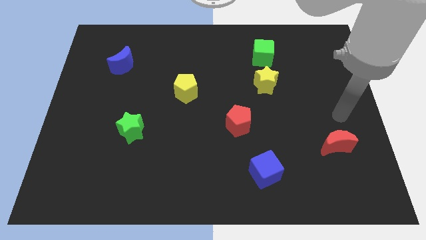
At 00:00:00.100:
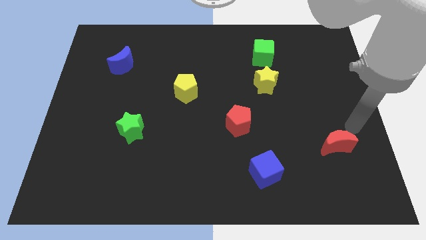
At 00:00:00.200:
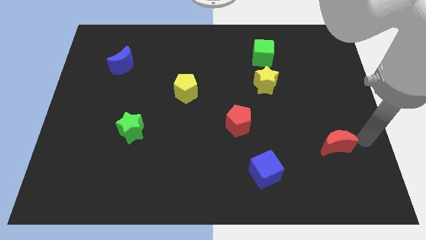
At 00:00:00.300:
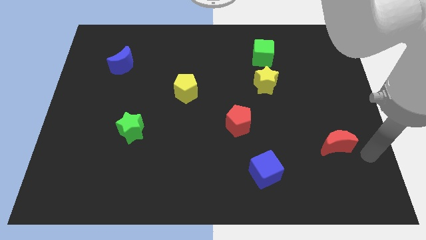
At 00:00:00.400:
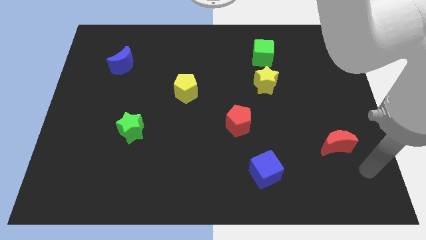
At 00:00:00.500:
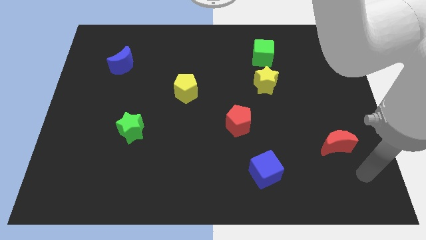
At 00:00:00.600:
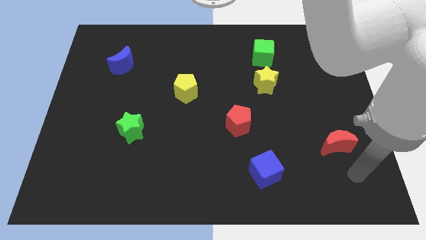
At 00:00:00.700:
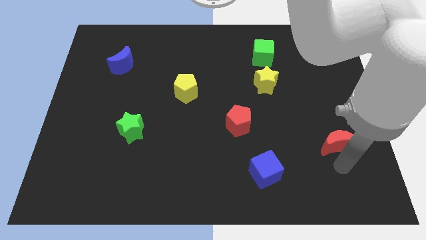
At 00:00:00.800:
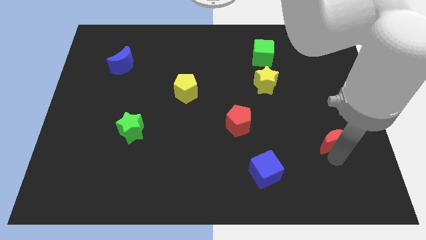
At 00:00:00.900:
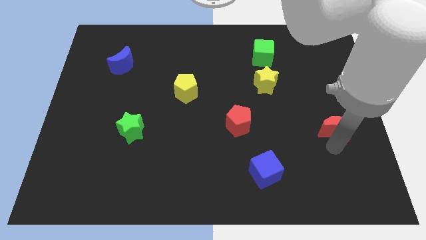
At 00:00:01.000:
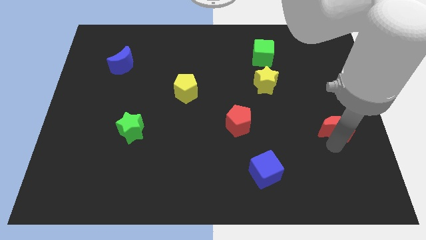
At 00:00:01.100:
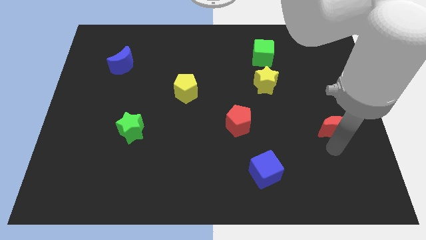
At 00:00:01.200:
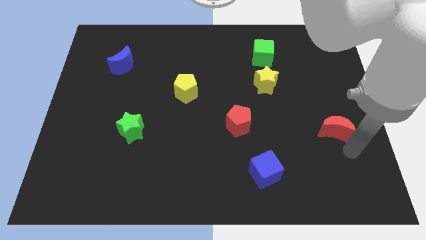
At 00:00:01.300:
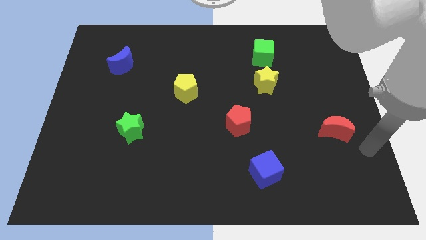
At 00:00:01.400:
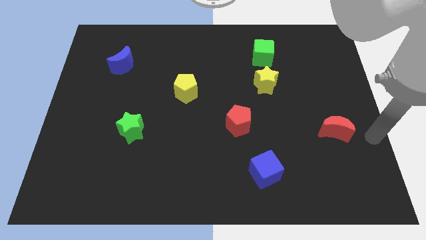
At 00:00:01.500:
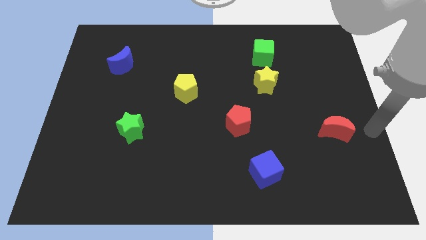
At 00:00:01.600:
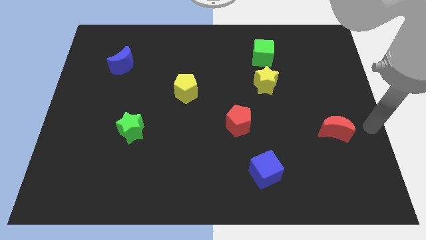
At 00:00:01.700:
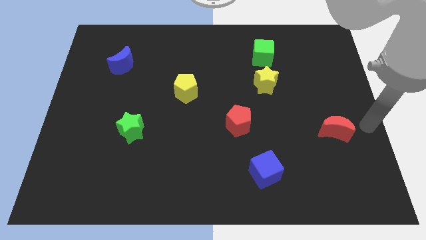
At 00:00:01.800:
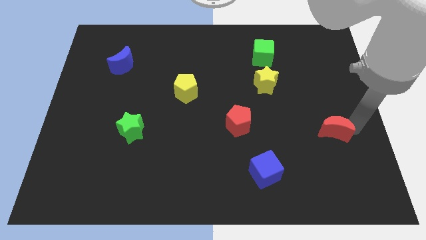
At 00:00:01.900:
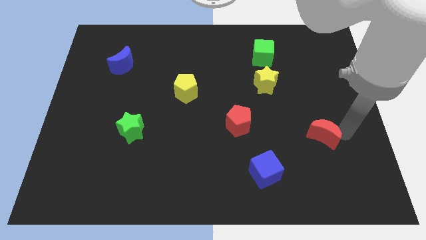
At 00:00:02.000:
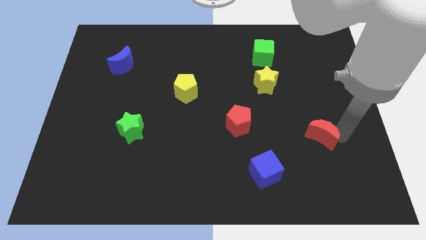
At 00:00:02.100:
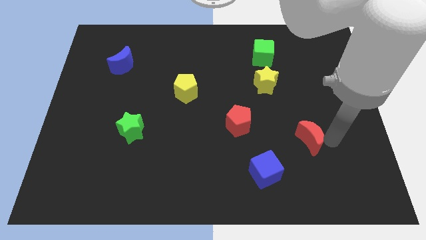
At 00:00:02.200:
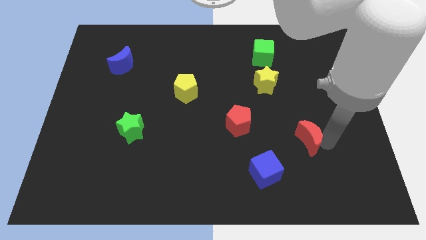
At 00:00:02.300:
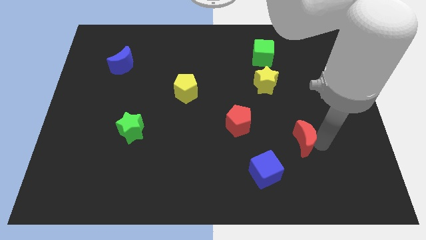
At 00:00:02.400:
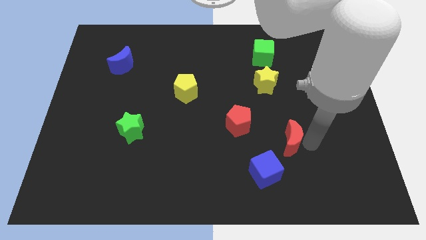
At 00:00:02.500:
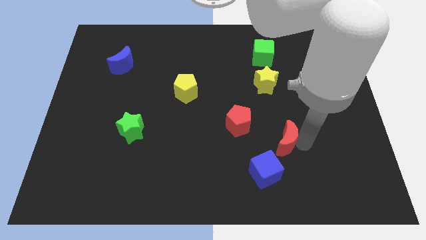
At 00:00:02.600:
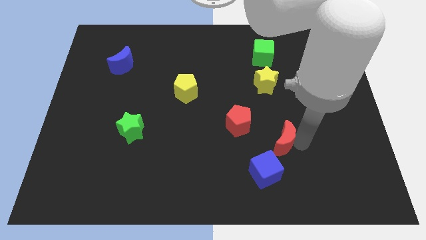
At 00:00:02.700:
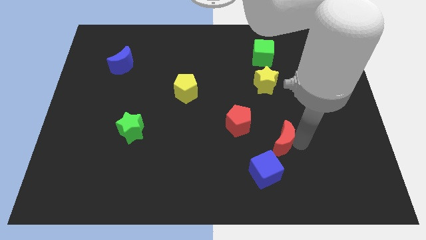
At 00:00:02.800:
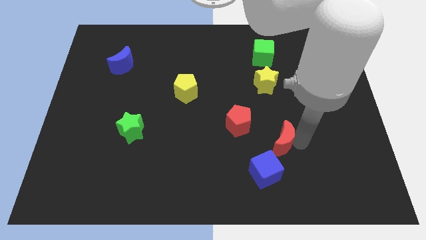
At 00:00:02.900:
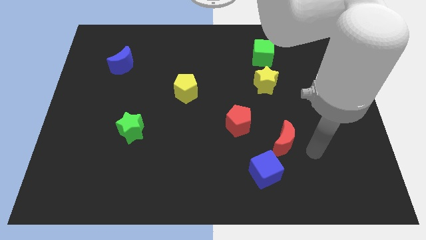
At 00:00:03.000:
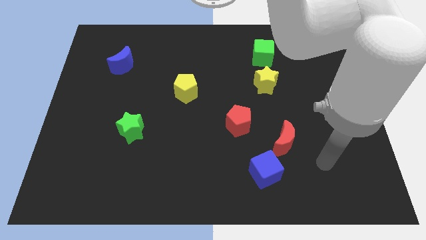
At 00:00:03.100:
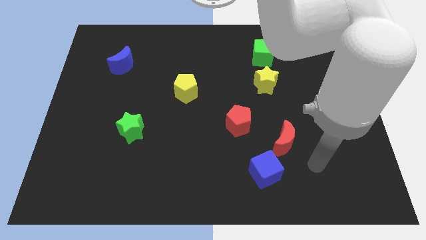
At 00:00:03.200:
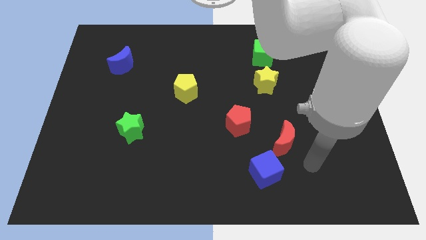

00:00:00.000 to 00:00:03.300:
move the red crescent close to the blue cube

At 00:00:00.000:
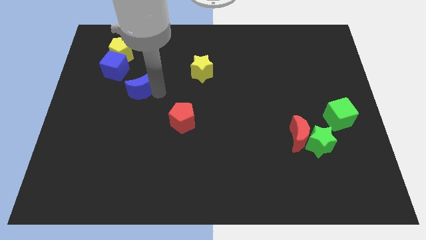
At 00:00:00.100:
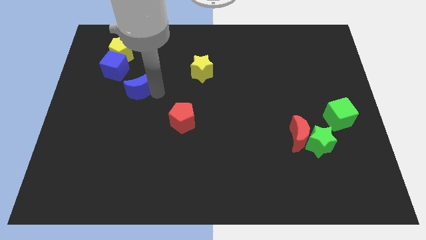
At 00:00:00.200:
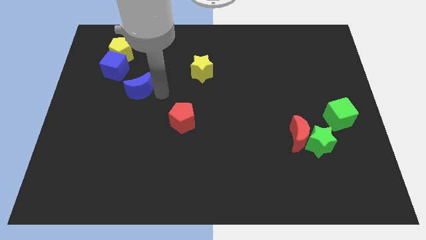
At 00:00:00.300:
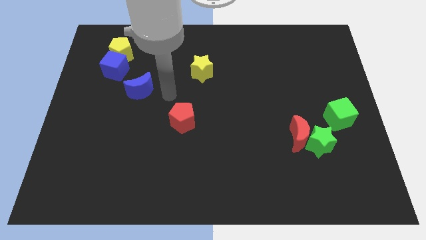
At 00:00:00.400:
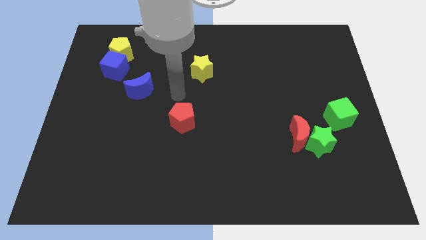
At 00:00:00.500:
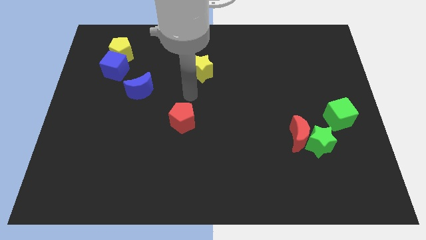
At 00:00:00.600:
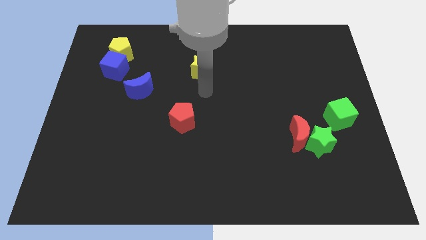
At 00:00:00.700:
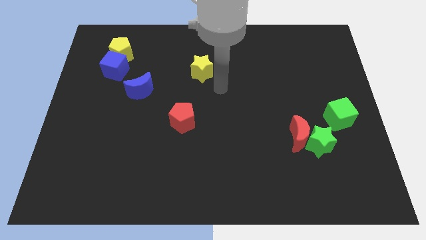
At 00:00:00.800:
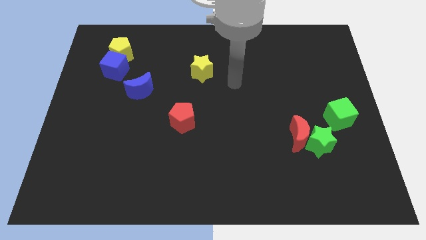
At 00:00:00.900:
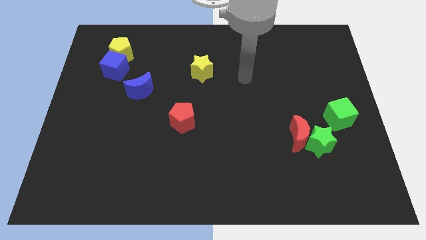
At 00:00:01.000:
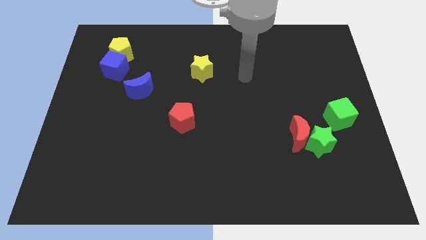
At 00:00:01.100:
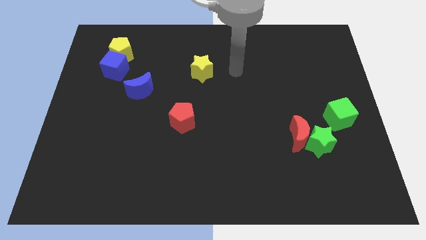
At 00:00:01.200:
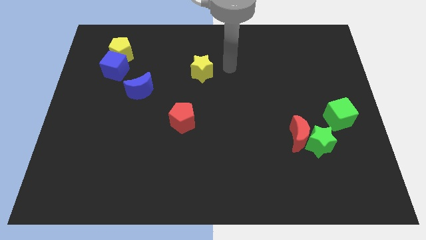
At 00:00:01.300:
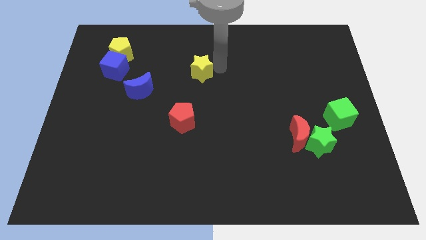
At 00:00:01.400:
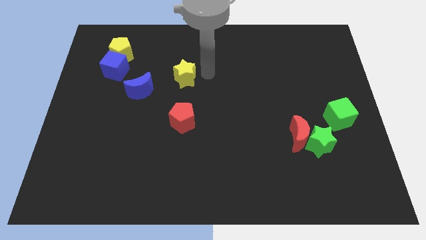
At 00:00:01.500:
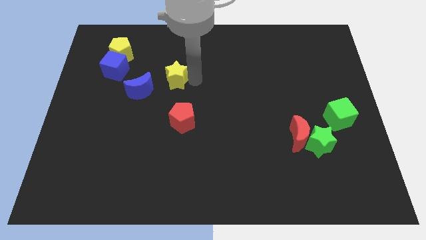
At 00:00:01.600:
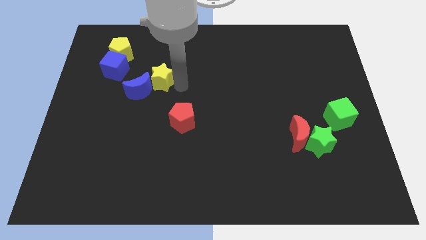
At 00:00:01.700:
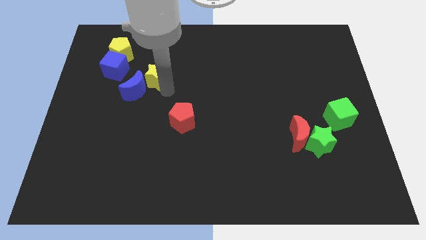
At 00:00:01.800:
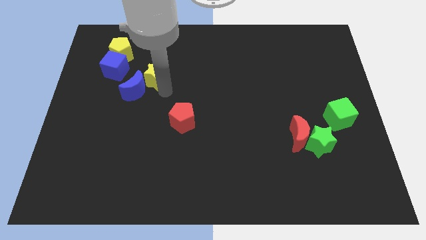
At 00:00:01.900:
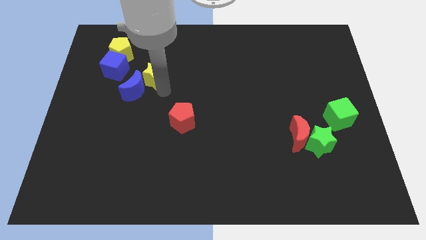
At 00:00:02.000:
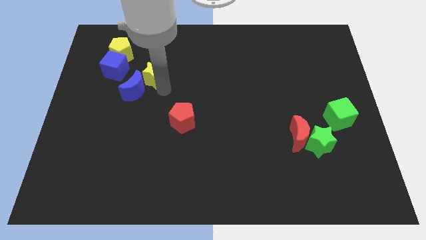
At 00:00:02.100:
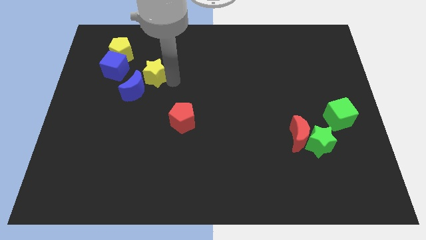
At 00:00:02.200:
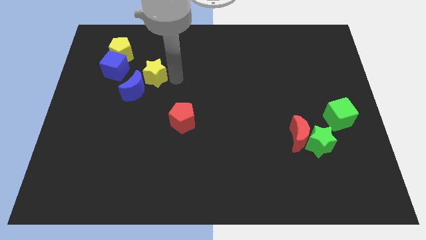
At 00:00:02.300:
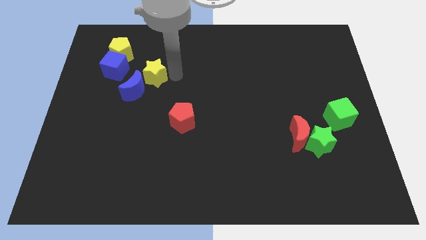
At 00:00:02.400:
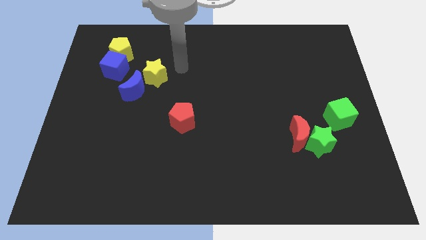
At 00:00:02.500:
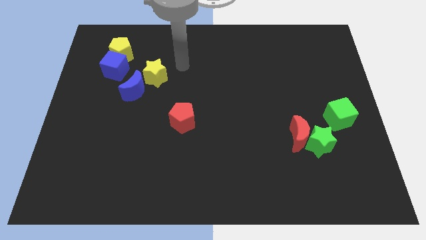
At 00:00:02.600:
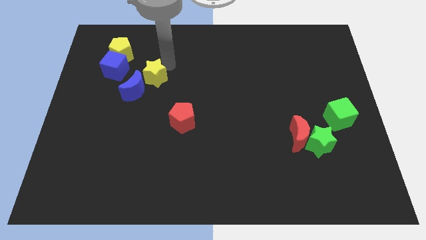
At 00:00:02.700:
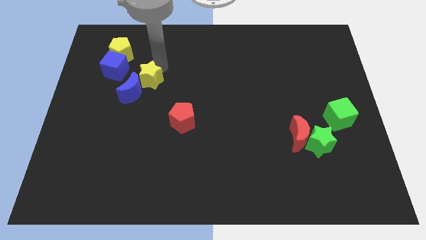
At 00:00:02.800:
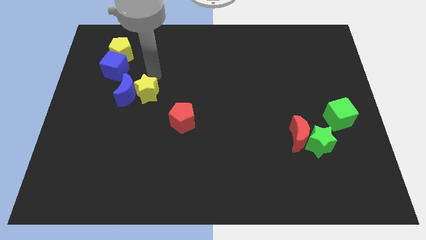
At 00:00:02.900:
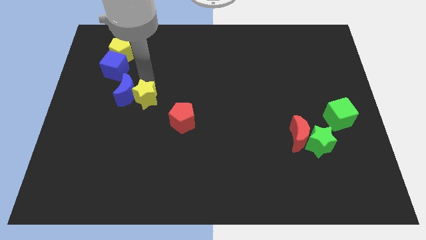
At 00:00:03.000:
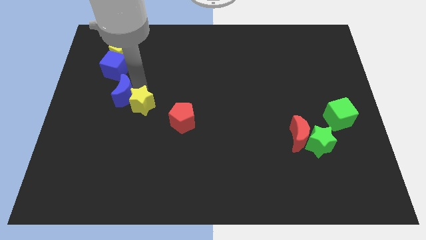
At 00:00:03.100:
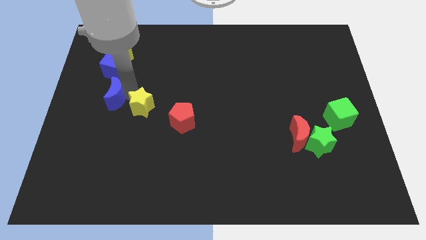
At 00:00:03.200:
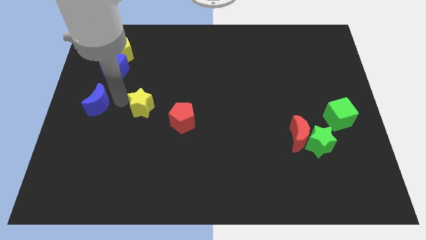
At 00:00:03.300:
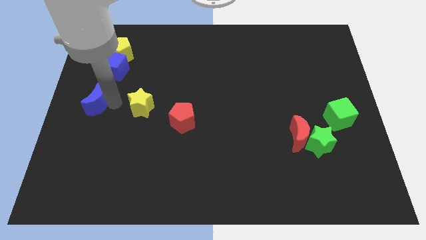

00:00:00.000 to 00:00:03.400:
place your arm between blue moon and yellow star

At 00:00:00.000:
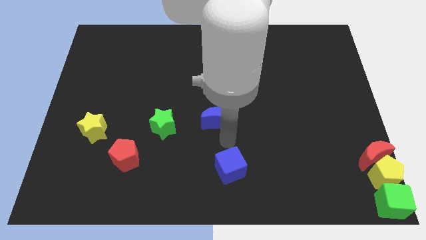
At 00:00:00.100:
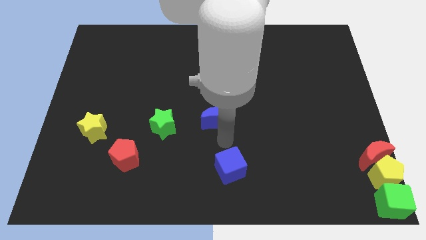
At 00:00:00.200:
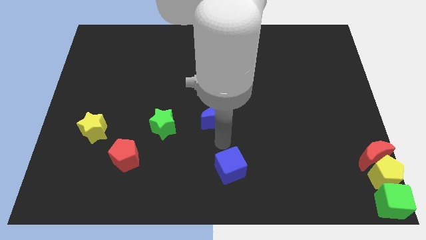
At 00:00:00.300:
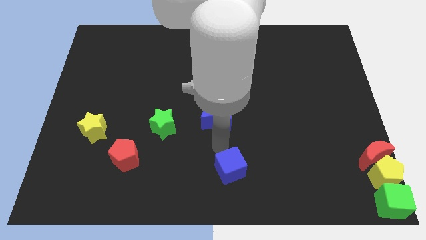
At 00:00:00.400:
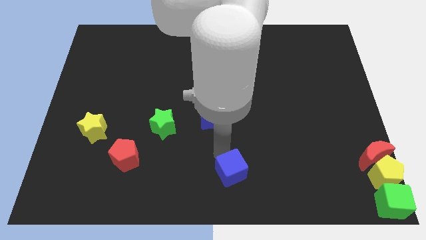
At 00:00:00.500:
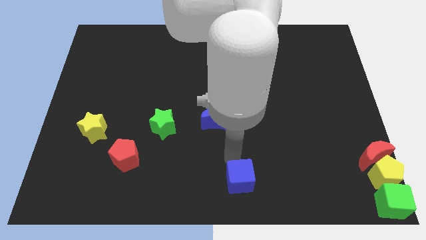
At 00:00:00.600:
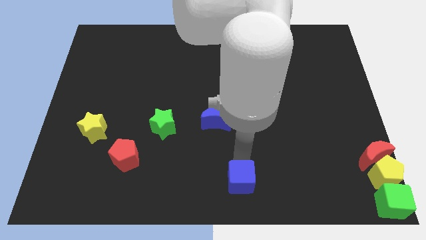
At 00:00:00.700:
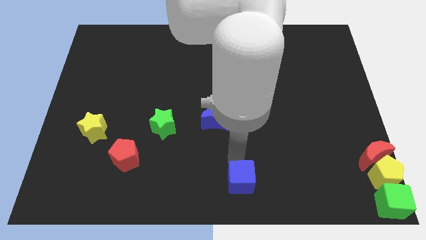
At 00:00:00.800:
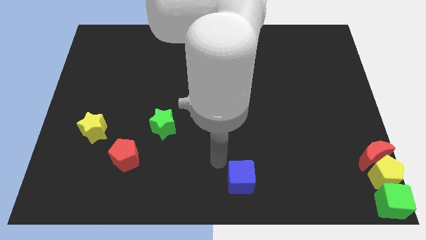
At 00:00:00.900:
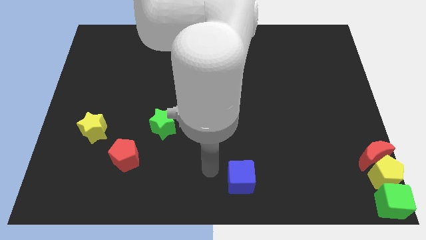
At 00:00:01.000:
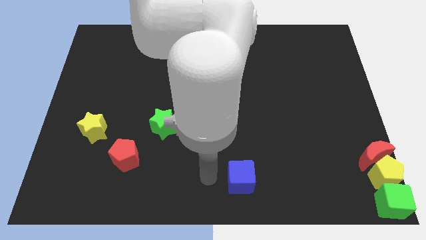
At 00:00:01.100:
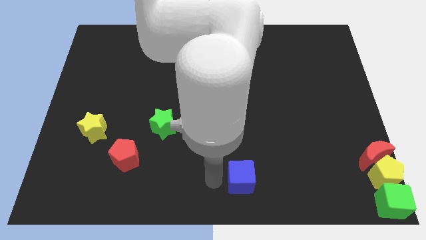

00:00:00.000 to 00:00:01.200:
move the blue cube to the bottom

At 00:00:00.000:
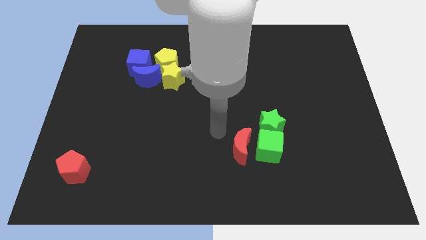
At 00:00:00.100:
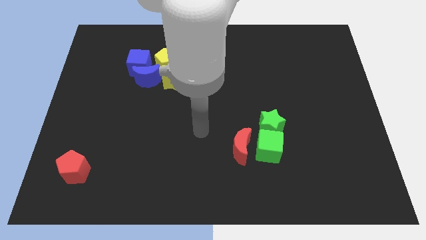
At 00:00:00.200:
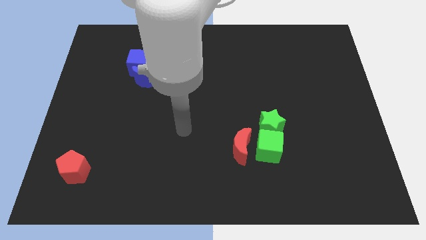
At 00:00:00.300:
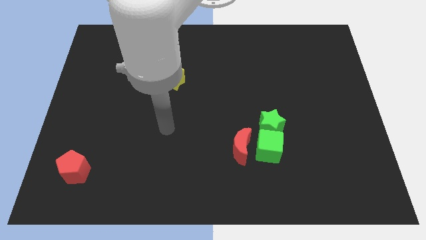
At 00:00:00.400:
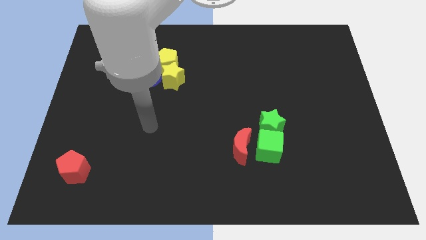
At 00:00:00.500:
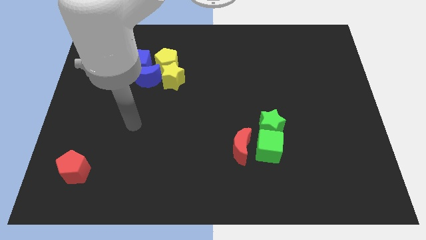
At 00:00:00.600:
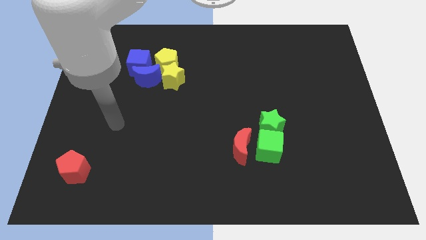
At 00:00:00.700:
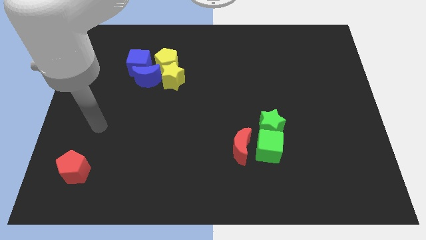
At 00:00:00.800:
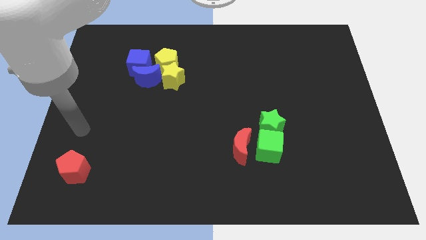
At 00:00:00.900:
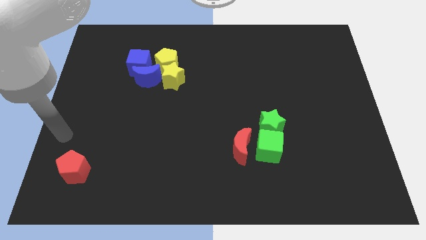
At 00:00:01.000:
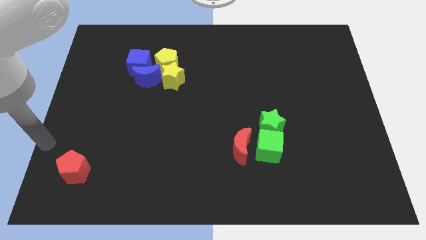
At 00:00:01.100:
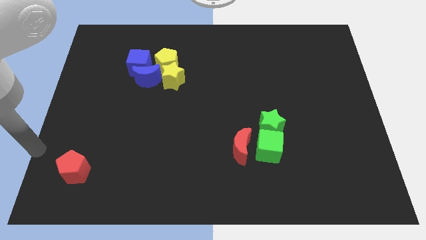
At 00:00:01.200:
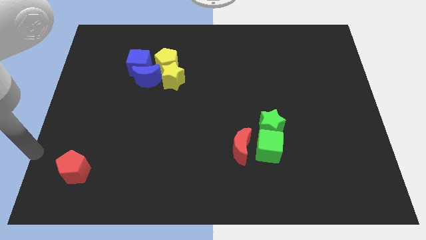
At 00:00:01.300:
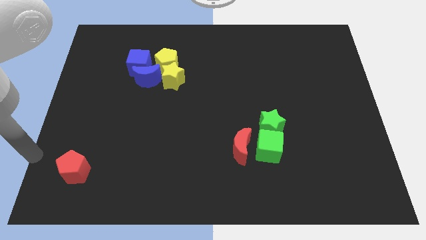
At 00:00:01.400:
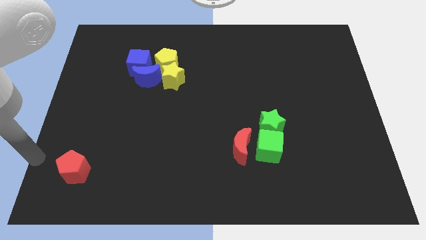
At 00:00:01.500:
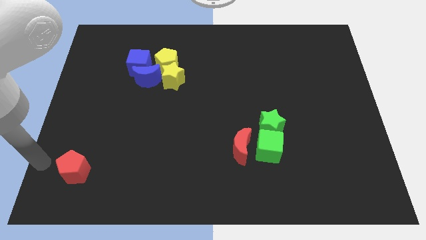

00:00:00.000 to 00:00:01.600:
go and point your arm at the left of the red pentagon
